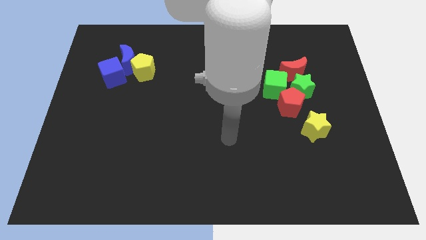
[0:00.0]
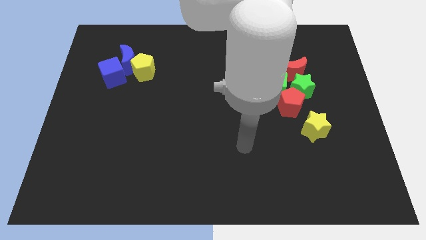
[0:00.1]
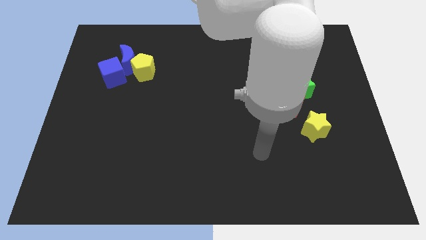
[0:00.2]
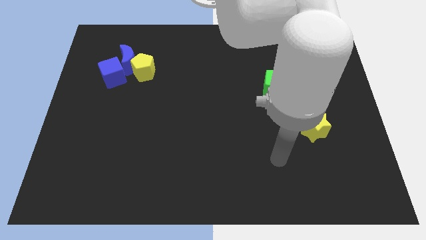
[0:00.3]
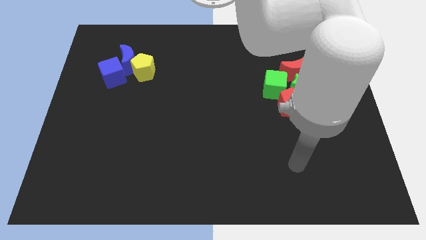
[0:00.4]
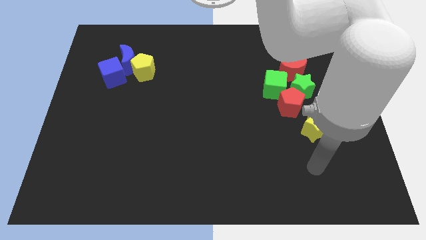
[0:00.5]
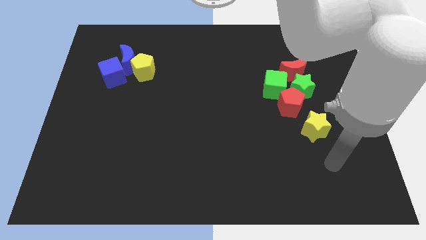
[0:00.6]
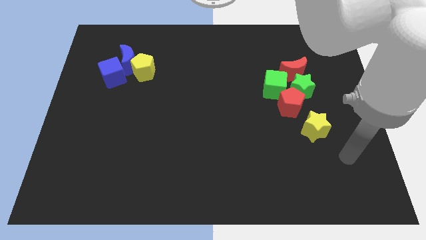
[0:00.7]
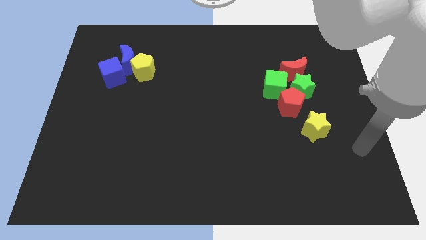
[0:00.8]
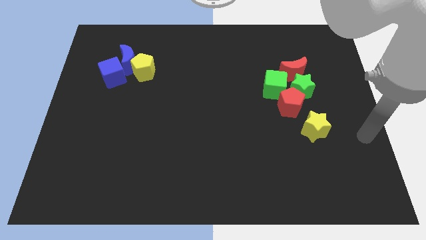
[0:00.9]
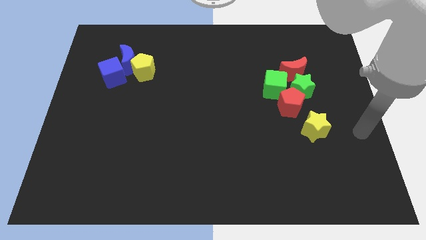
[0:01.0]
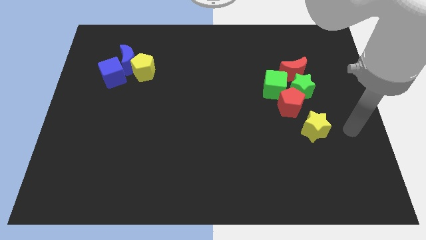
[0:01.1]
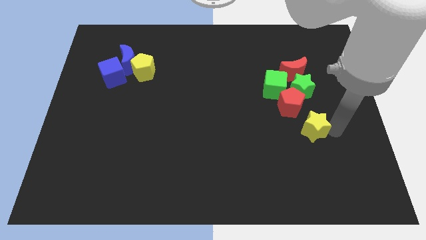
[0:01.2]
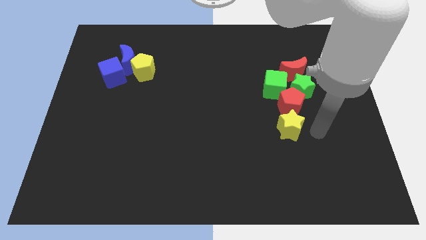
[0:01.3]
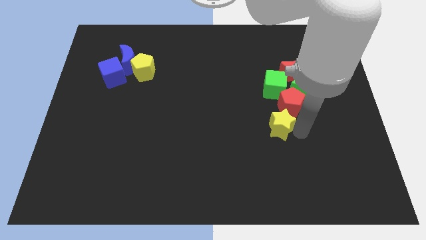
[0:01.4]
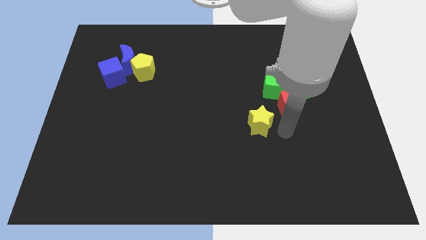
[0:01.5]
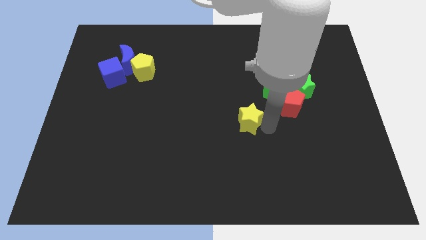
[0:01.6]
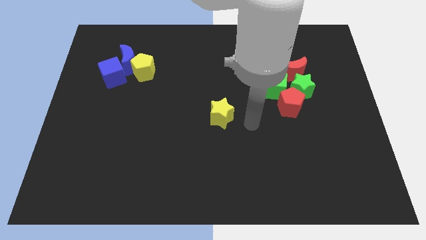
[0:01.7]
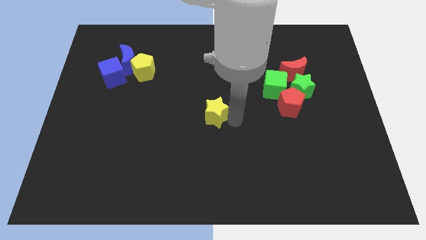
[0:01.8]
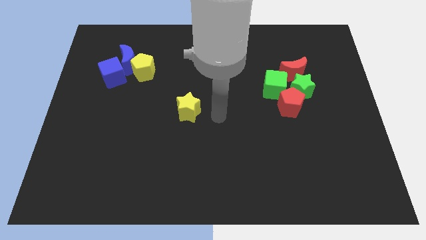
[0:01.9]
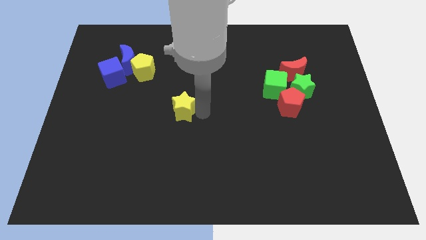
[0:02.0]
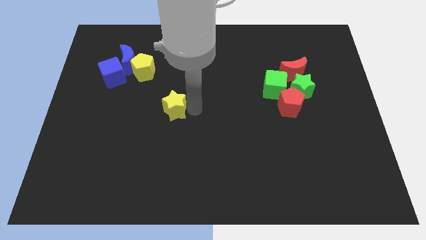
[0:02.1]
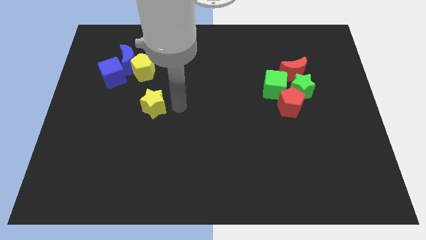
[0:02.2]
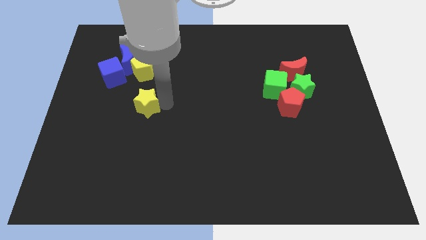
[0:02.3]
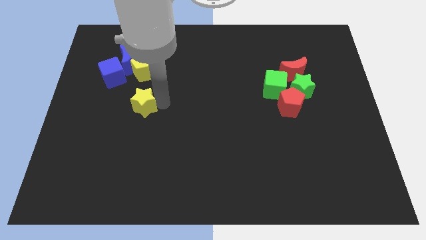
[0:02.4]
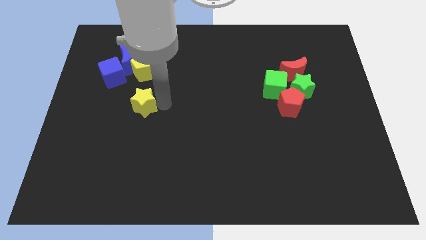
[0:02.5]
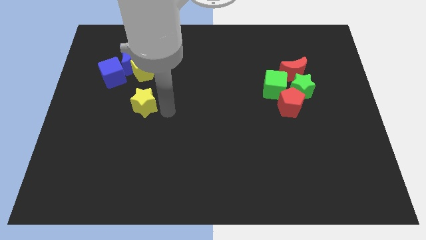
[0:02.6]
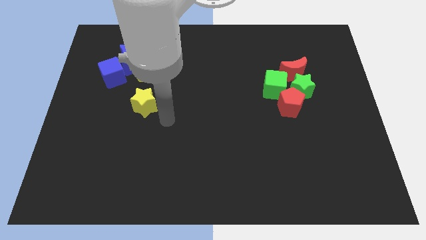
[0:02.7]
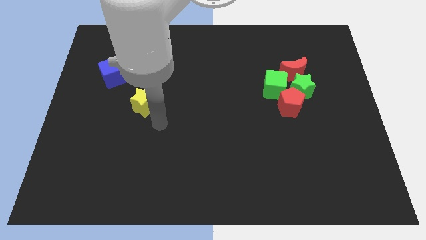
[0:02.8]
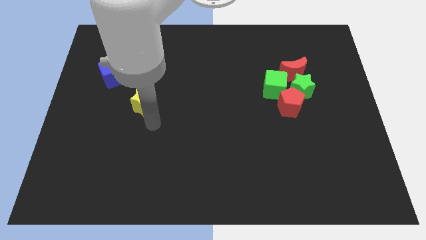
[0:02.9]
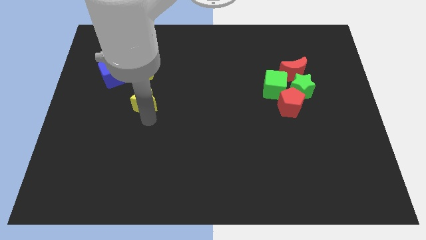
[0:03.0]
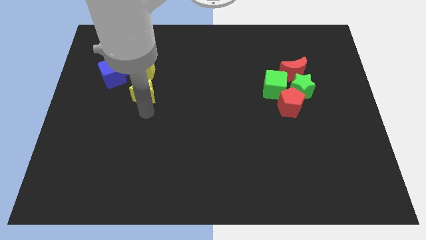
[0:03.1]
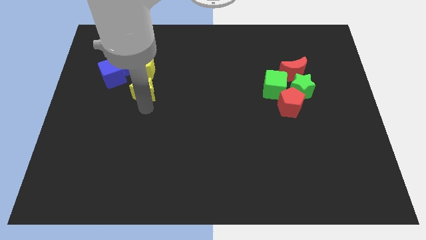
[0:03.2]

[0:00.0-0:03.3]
push the yellow star below the yellow pentagon

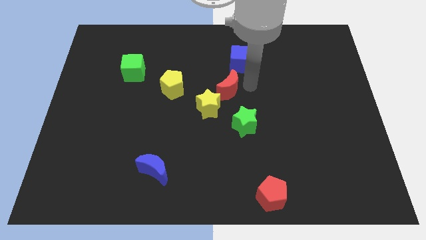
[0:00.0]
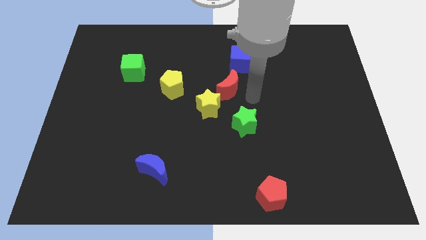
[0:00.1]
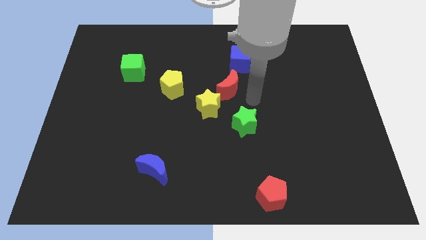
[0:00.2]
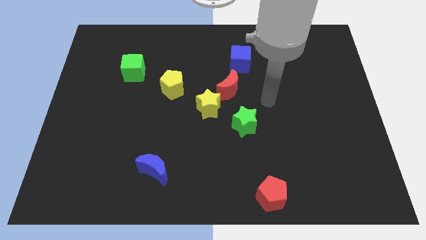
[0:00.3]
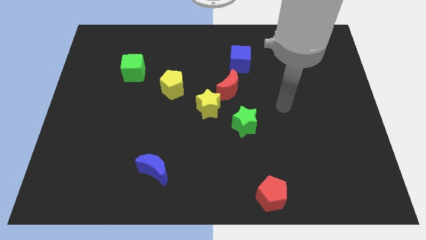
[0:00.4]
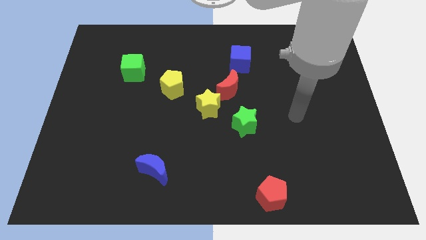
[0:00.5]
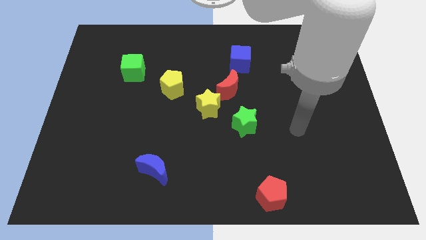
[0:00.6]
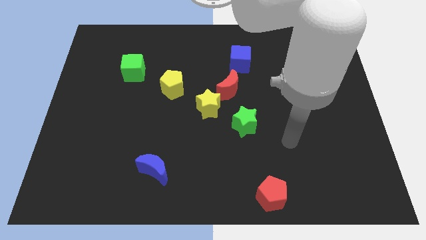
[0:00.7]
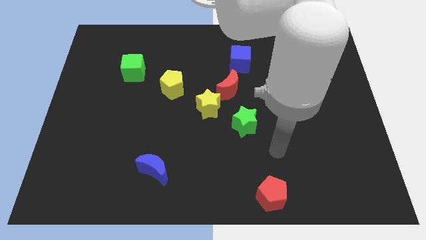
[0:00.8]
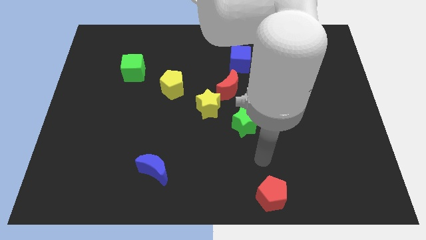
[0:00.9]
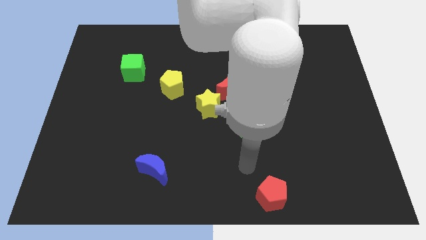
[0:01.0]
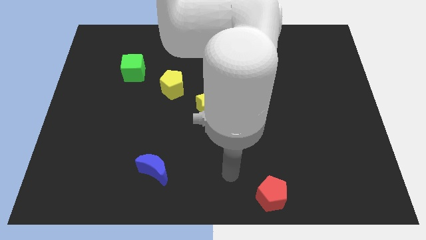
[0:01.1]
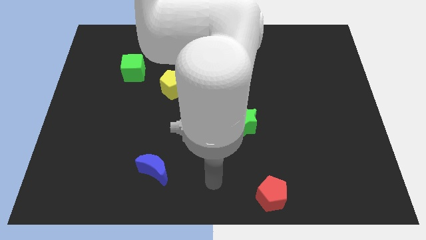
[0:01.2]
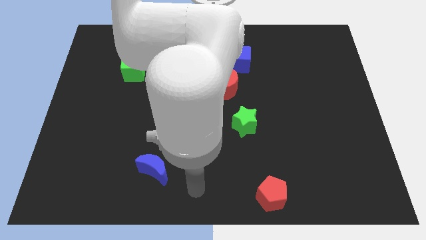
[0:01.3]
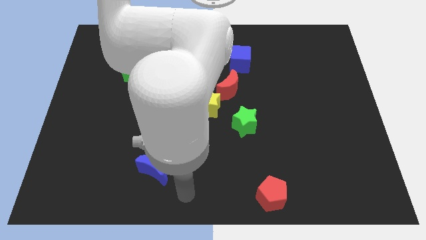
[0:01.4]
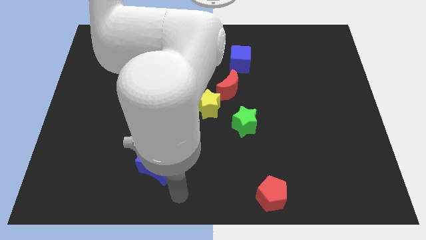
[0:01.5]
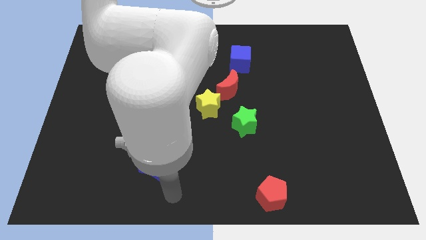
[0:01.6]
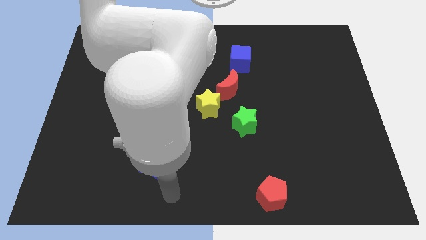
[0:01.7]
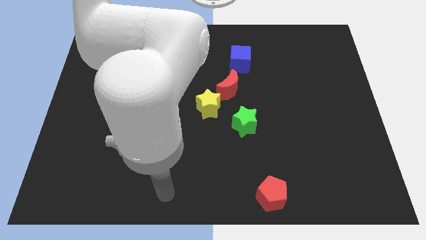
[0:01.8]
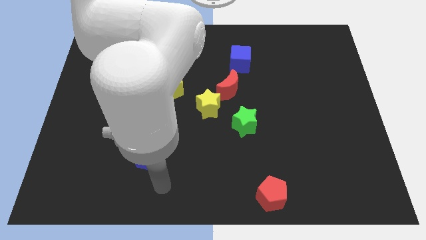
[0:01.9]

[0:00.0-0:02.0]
point the arm at the bottom side of the blue moon

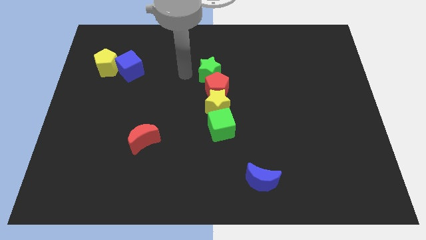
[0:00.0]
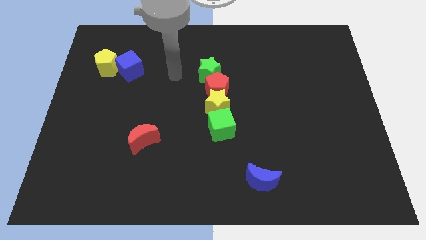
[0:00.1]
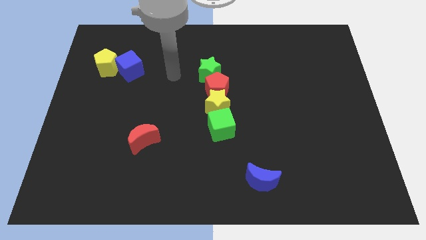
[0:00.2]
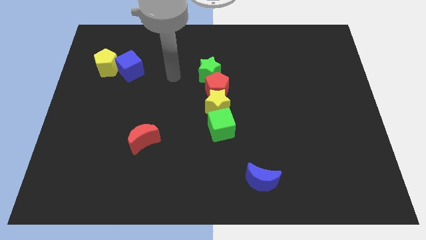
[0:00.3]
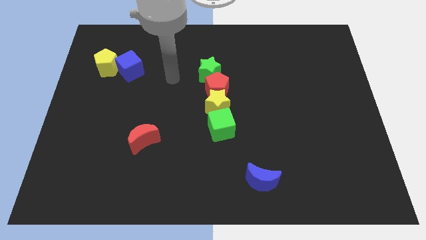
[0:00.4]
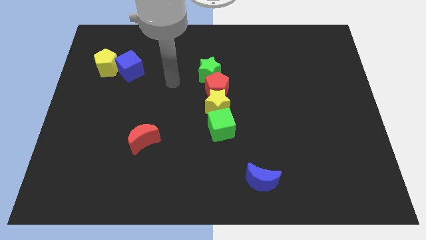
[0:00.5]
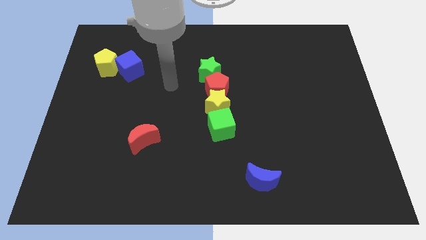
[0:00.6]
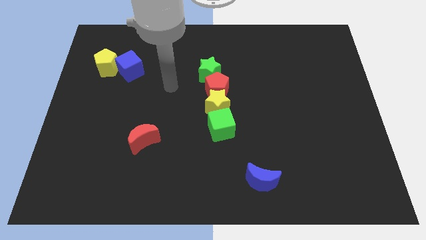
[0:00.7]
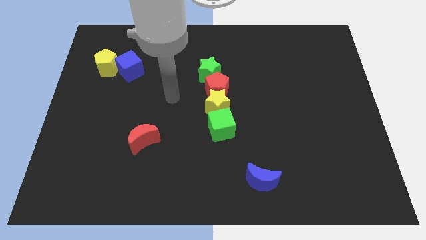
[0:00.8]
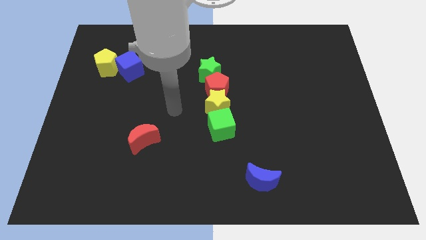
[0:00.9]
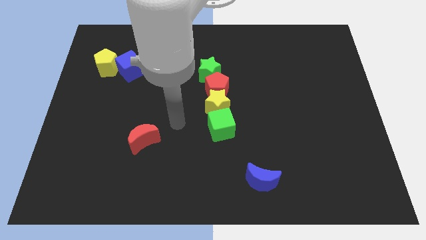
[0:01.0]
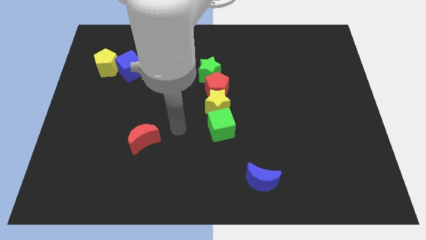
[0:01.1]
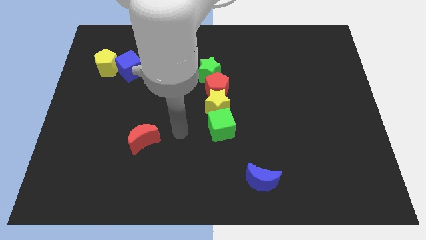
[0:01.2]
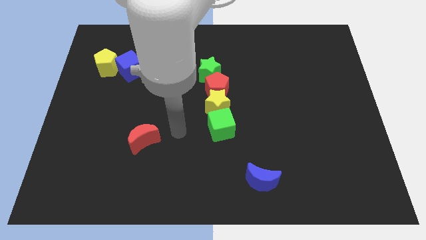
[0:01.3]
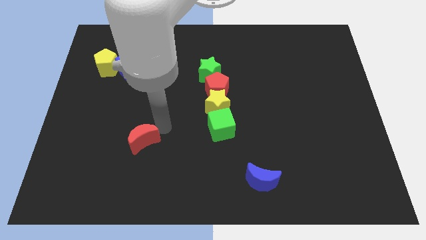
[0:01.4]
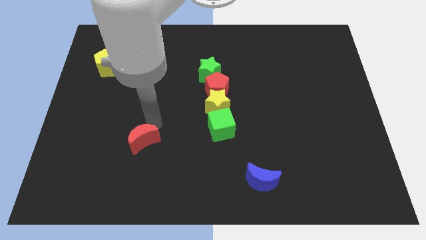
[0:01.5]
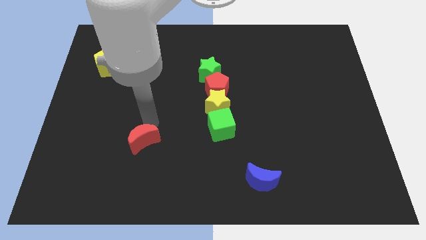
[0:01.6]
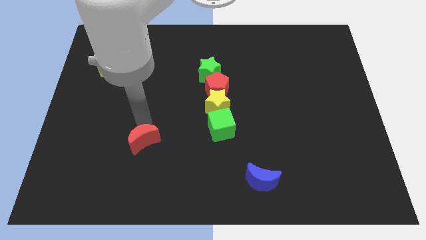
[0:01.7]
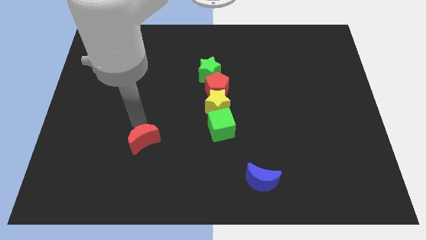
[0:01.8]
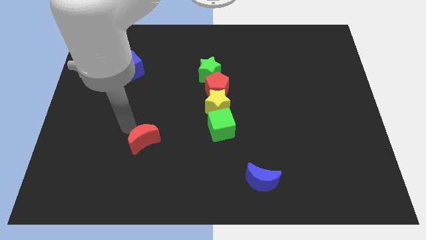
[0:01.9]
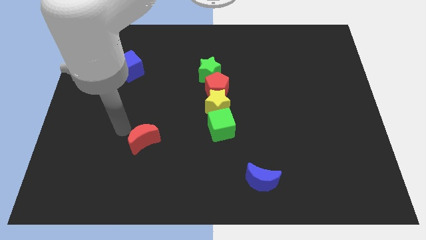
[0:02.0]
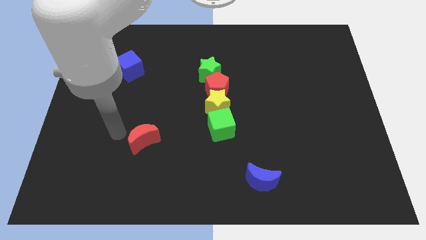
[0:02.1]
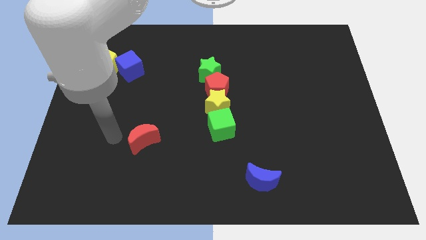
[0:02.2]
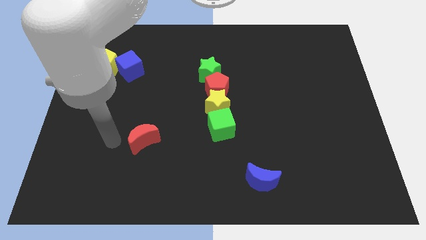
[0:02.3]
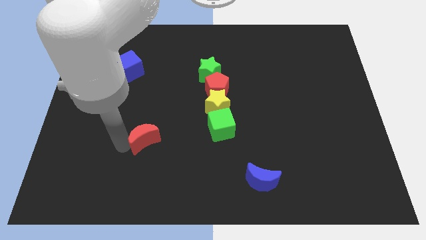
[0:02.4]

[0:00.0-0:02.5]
move your arm and point to teh left of red moon

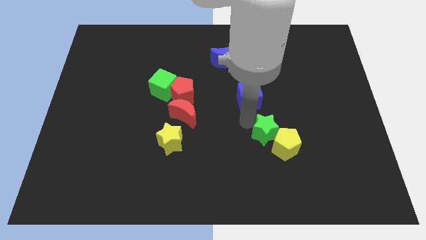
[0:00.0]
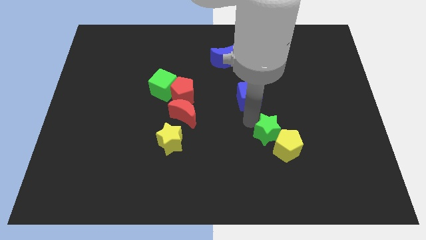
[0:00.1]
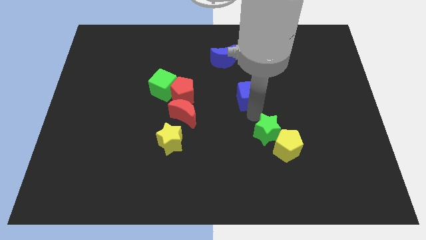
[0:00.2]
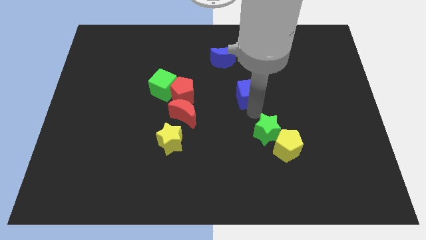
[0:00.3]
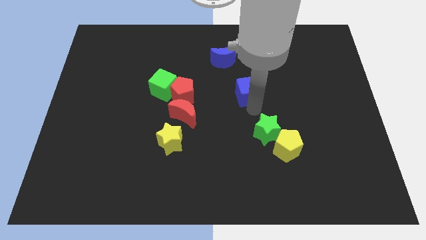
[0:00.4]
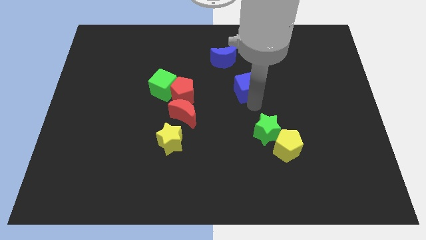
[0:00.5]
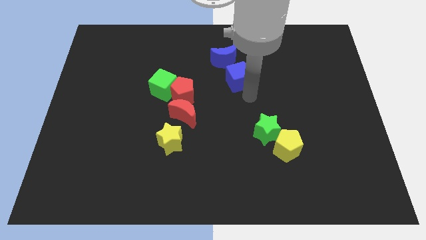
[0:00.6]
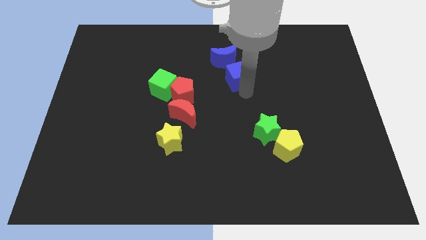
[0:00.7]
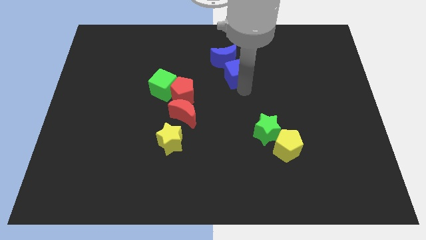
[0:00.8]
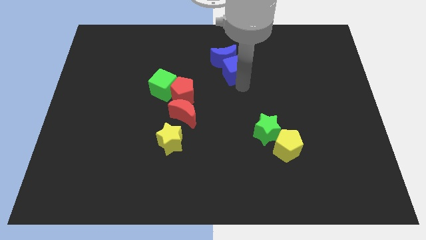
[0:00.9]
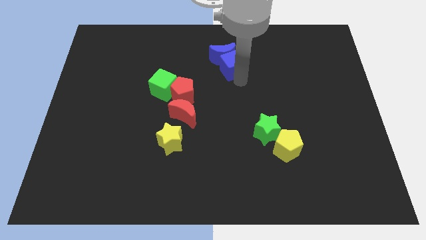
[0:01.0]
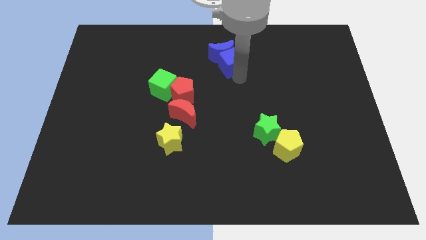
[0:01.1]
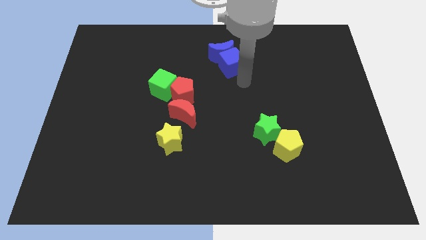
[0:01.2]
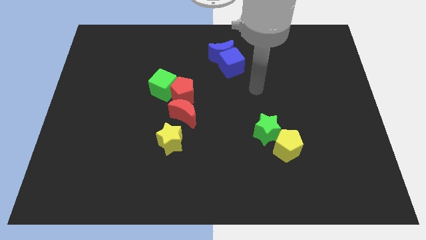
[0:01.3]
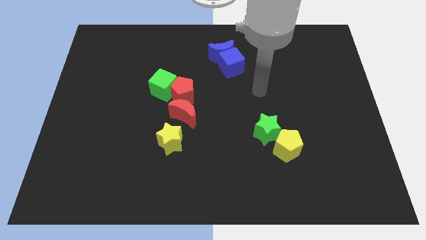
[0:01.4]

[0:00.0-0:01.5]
move the blue cube into the blue moon
